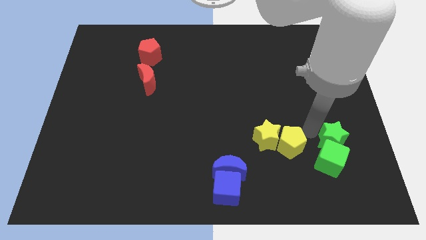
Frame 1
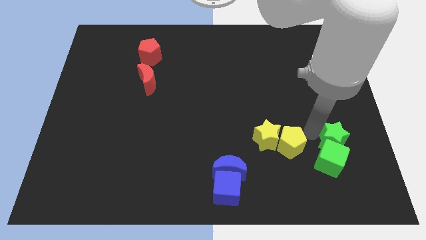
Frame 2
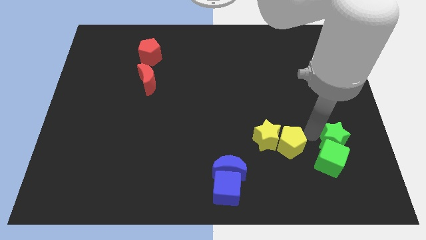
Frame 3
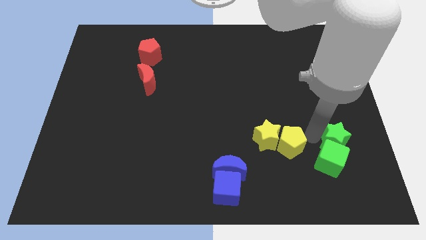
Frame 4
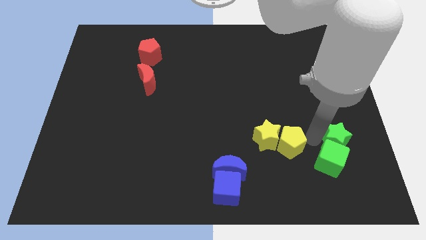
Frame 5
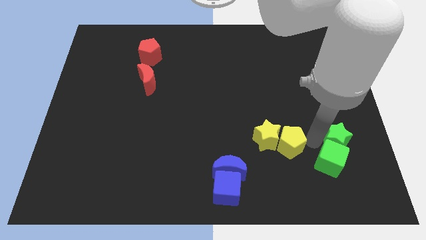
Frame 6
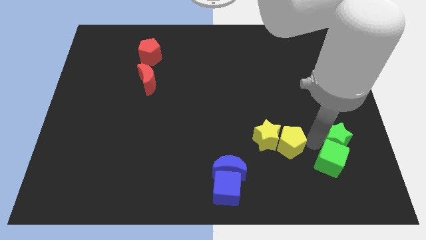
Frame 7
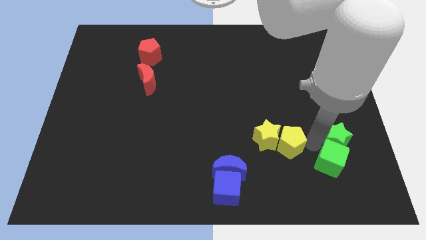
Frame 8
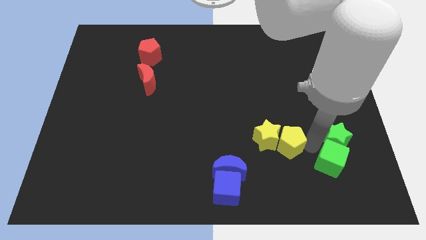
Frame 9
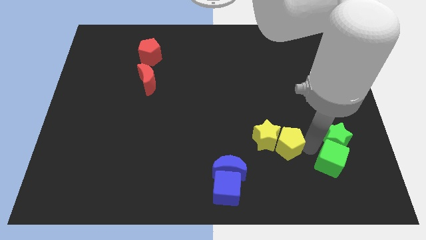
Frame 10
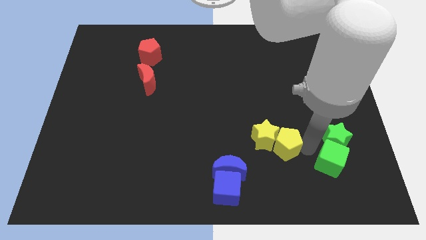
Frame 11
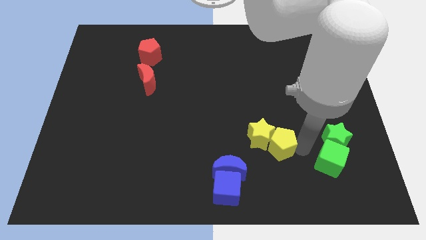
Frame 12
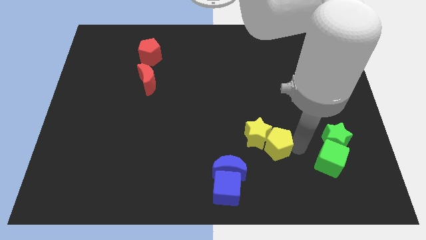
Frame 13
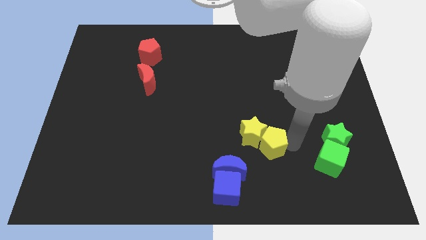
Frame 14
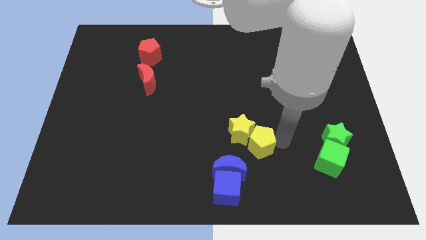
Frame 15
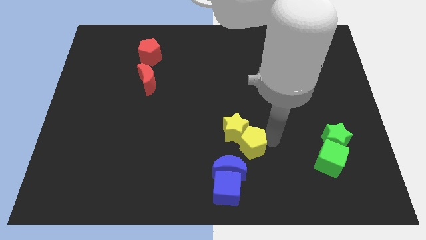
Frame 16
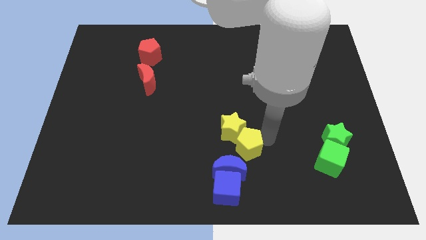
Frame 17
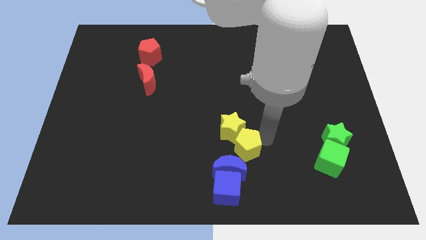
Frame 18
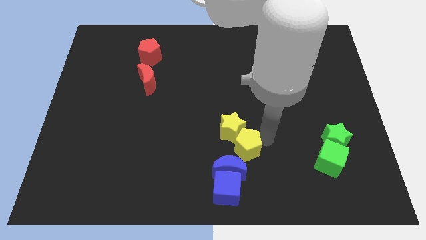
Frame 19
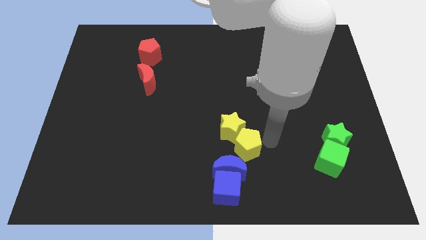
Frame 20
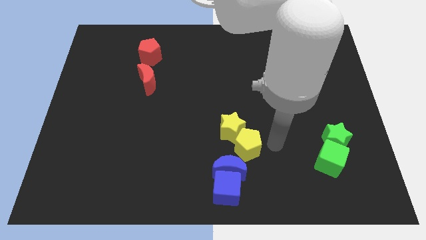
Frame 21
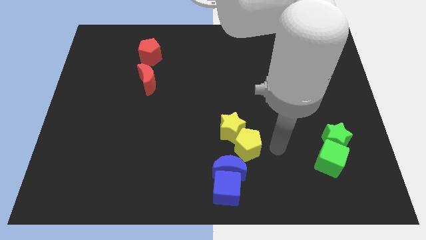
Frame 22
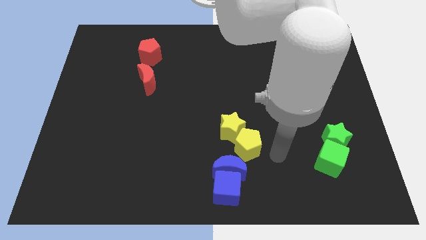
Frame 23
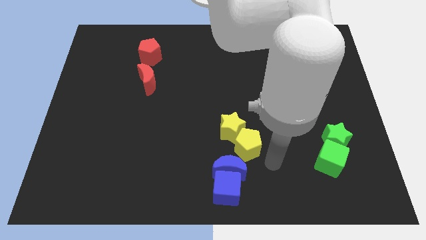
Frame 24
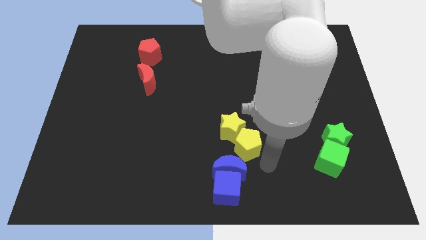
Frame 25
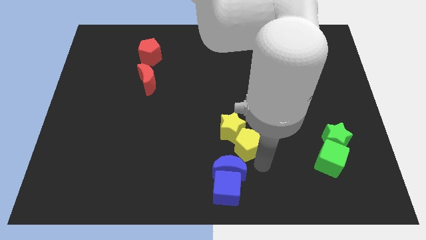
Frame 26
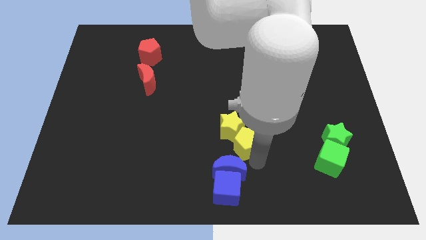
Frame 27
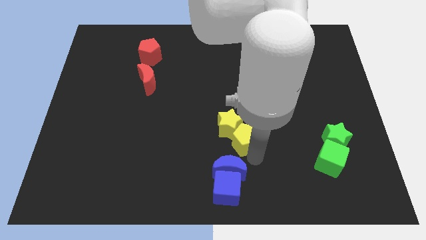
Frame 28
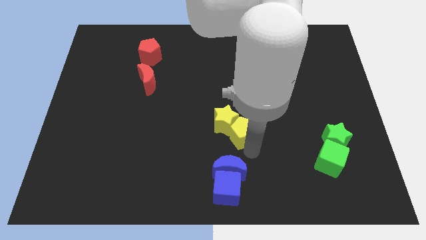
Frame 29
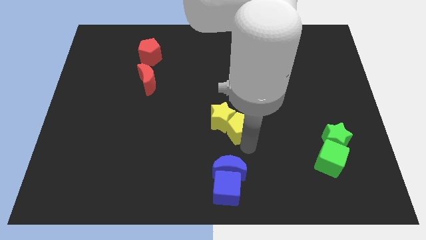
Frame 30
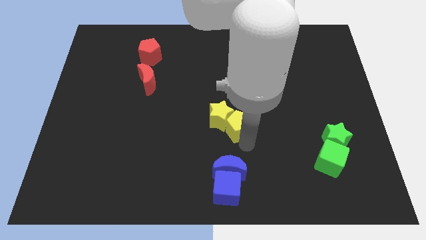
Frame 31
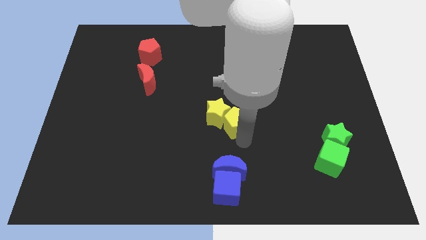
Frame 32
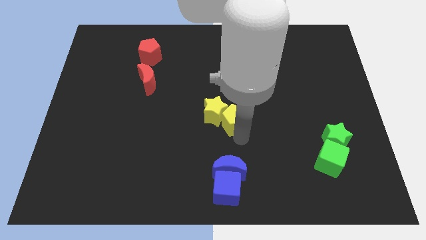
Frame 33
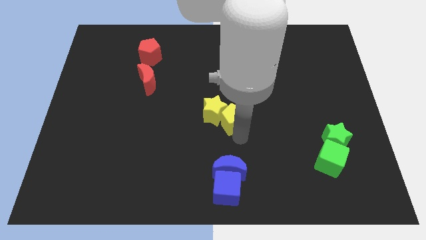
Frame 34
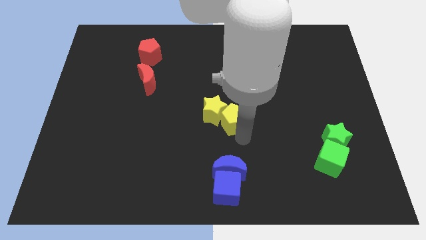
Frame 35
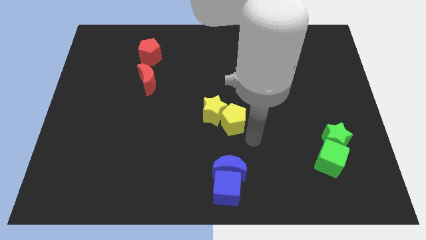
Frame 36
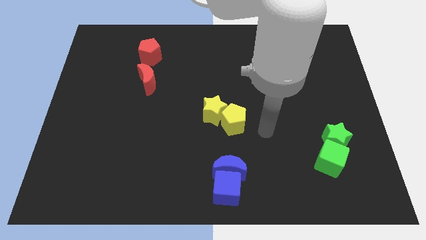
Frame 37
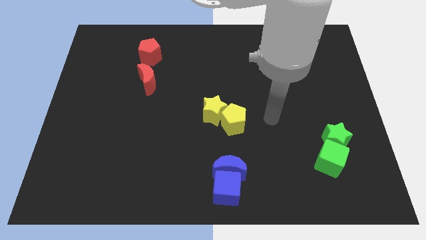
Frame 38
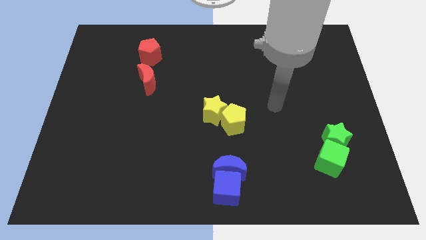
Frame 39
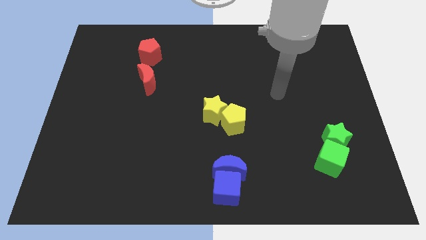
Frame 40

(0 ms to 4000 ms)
push the yellow pentagon and star to the center of the board

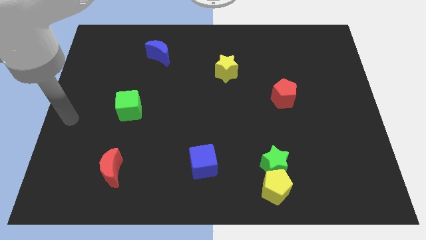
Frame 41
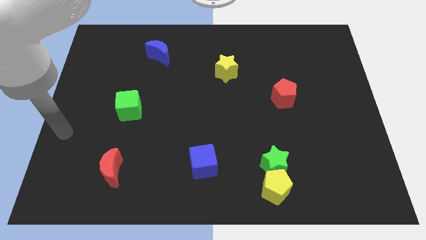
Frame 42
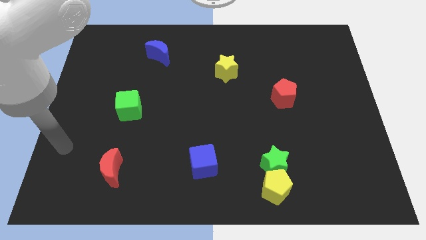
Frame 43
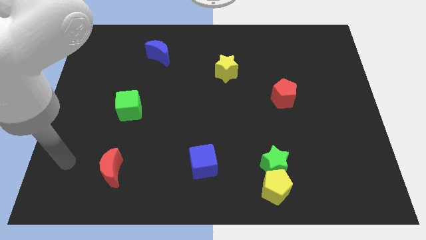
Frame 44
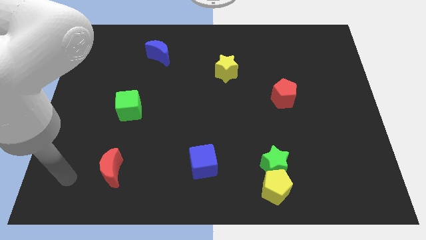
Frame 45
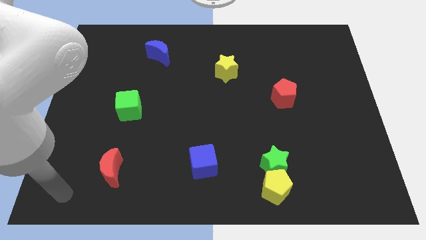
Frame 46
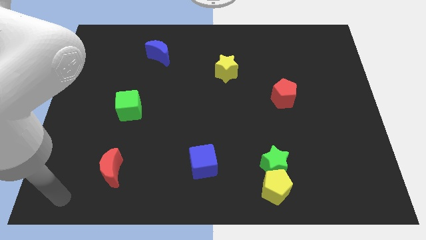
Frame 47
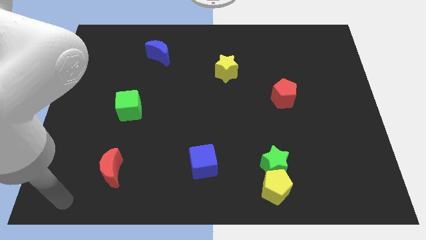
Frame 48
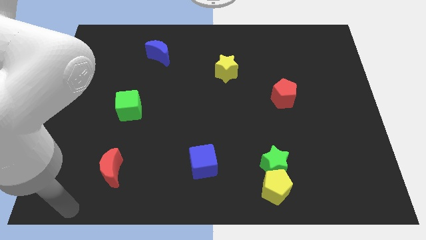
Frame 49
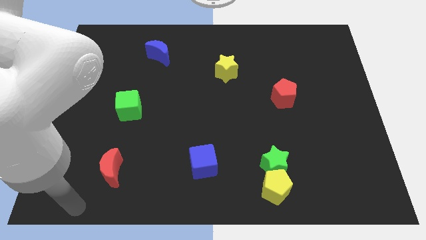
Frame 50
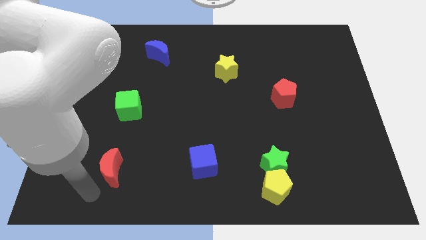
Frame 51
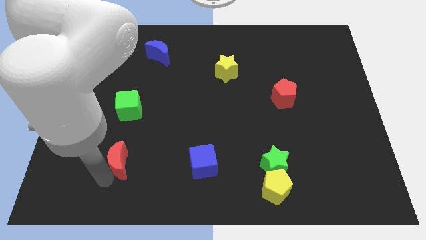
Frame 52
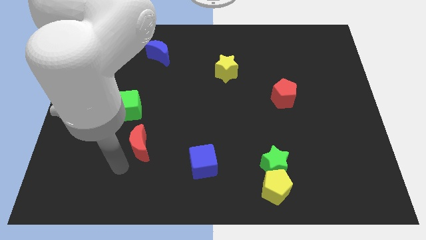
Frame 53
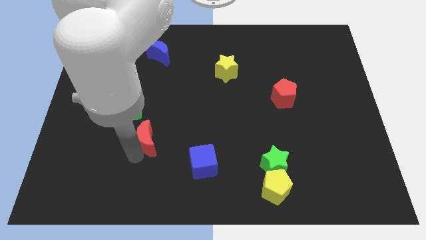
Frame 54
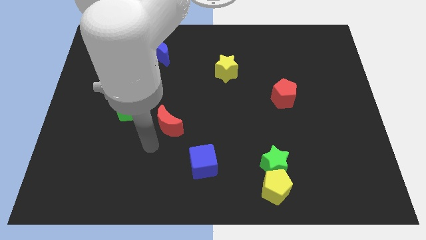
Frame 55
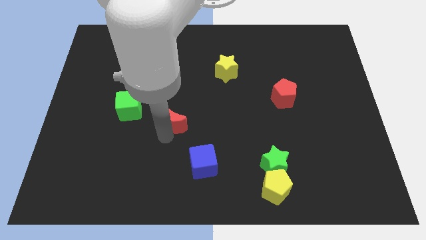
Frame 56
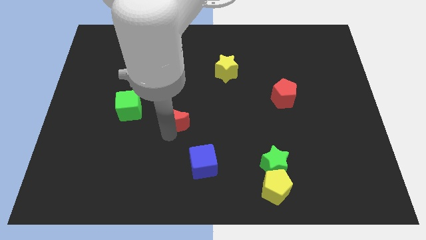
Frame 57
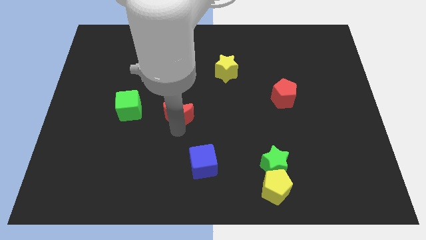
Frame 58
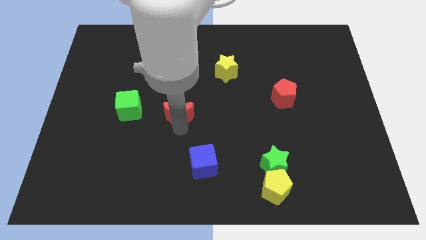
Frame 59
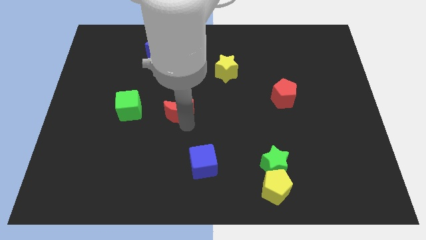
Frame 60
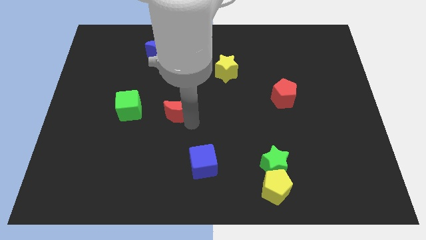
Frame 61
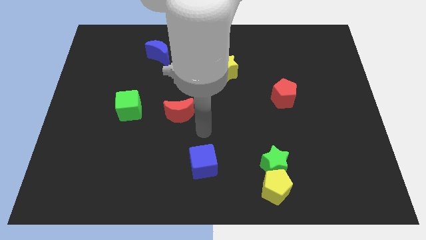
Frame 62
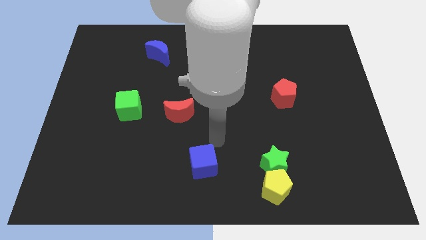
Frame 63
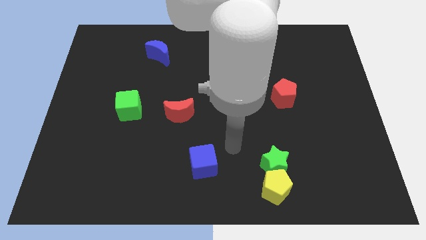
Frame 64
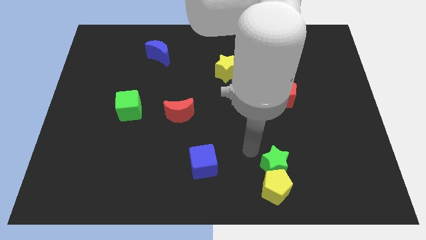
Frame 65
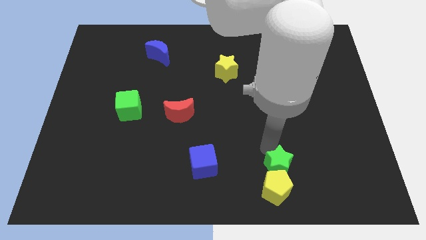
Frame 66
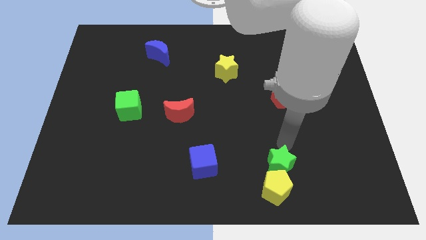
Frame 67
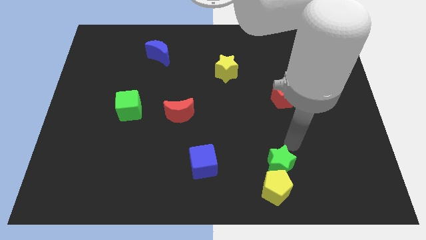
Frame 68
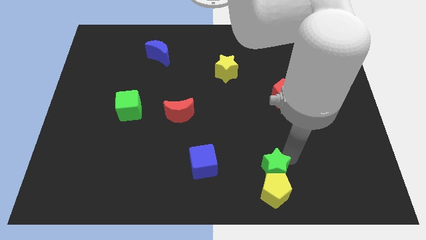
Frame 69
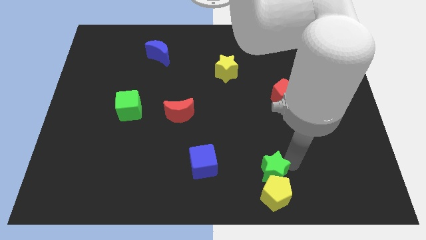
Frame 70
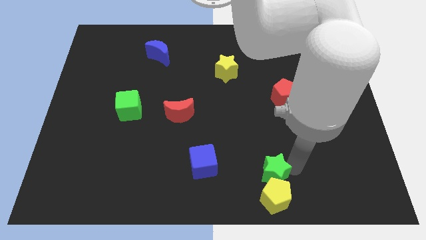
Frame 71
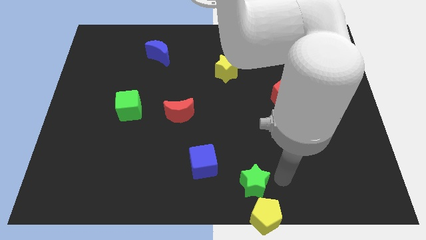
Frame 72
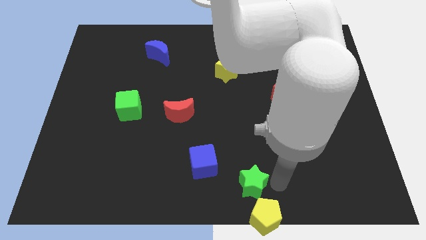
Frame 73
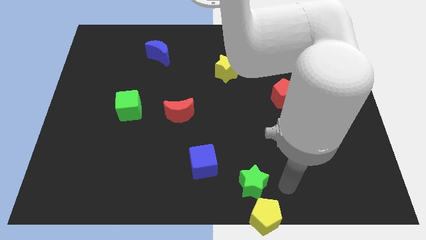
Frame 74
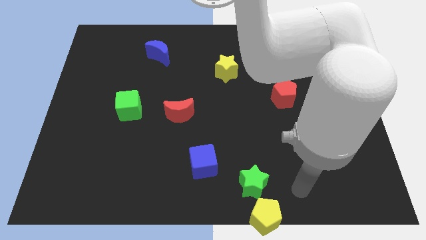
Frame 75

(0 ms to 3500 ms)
move the red moon to the right of the green cube

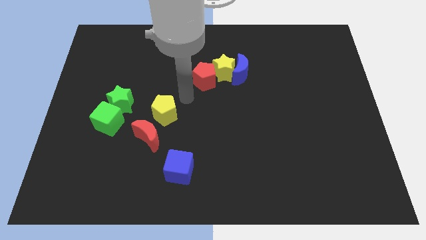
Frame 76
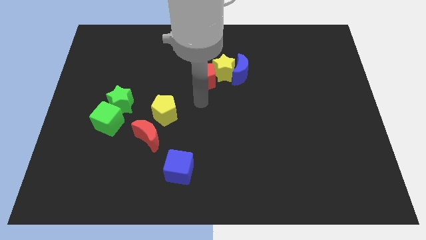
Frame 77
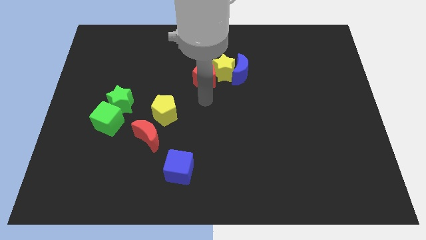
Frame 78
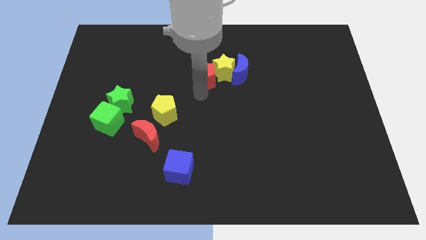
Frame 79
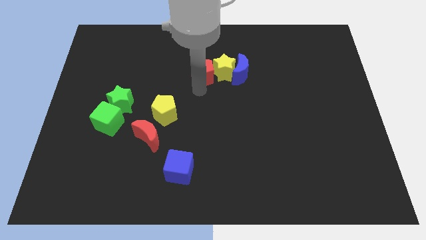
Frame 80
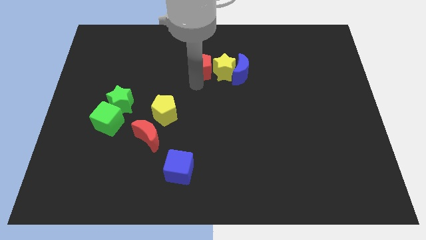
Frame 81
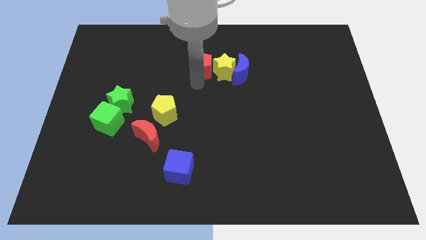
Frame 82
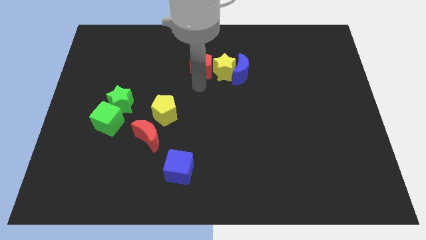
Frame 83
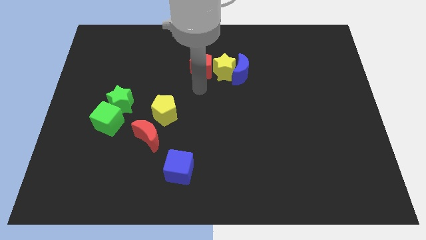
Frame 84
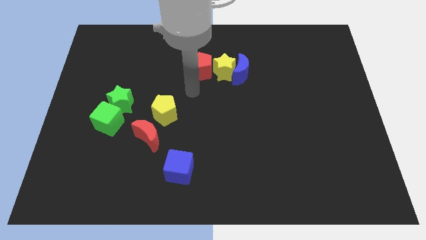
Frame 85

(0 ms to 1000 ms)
move red pentagon slightly upwards

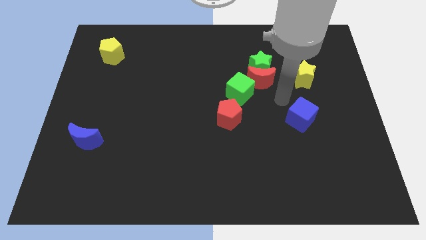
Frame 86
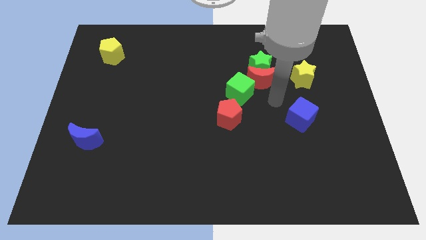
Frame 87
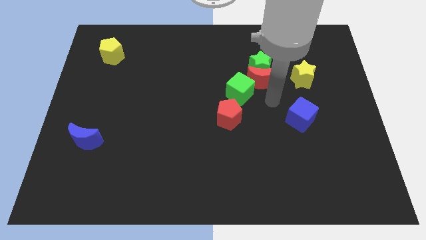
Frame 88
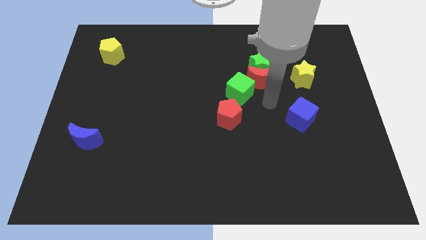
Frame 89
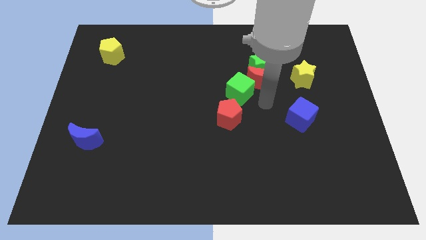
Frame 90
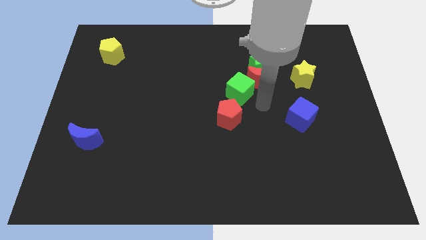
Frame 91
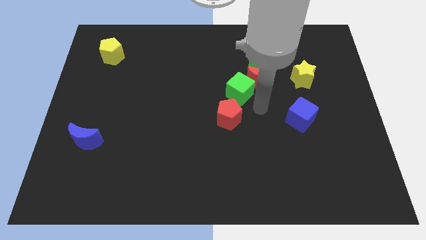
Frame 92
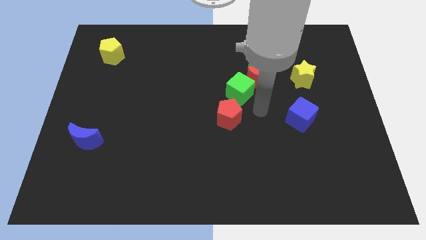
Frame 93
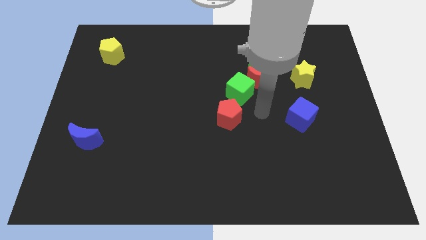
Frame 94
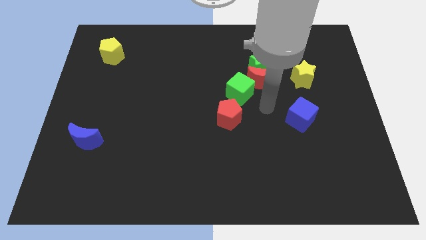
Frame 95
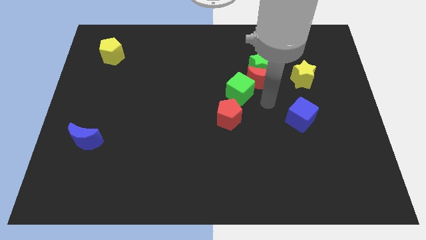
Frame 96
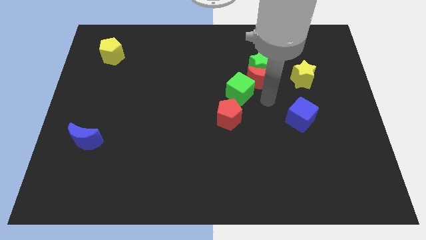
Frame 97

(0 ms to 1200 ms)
move your arm in between green and blue cube
